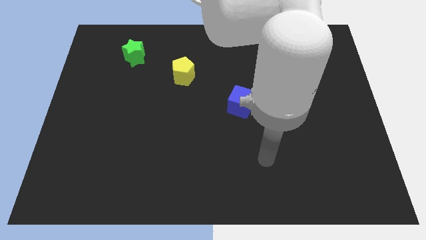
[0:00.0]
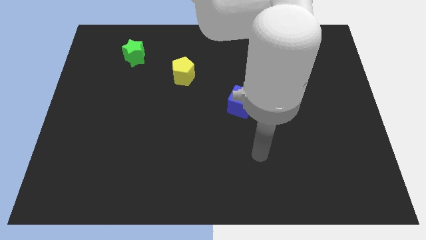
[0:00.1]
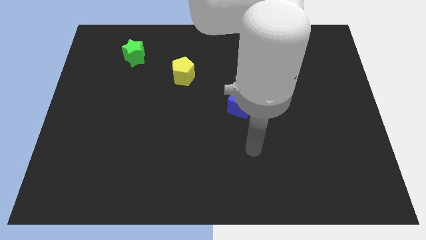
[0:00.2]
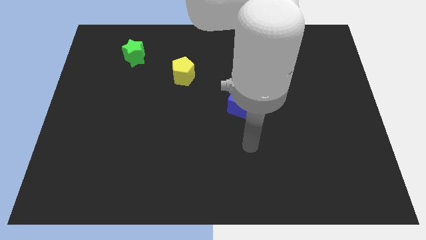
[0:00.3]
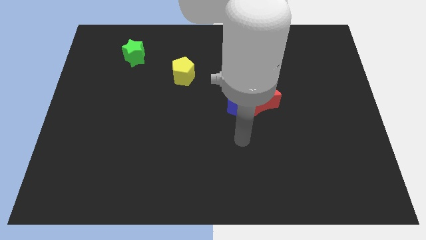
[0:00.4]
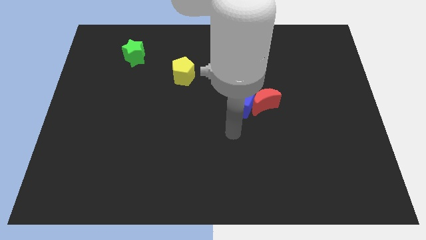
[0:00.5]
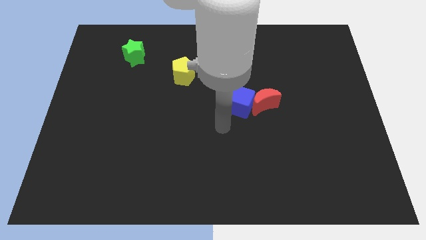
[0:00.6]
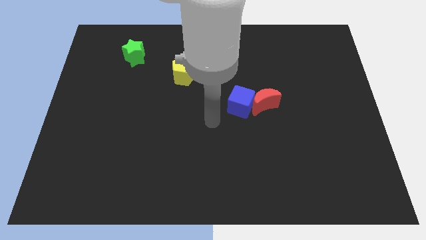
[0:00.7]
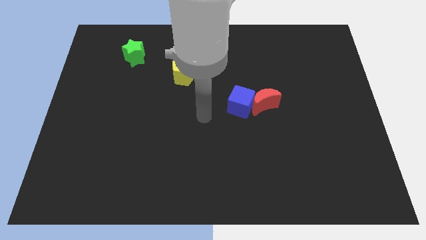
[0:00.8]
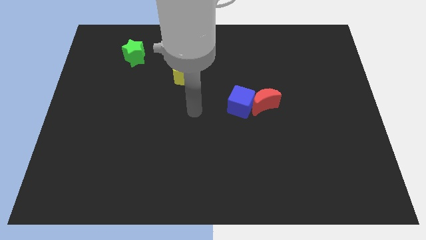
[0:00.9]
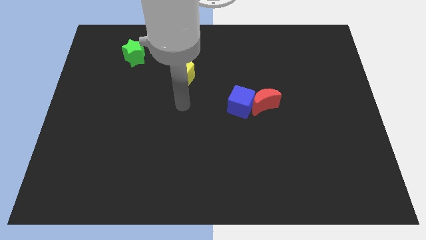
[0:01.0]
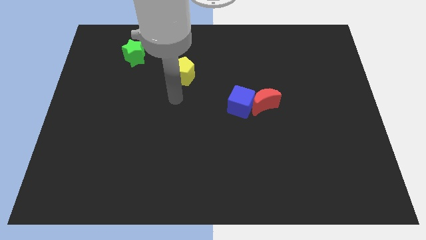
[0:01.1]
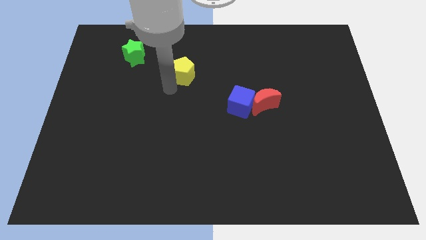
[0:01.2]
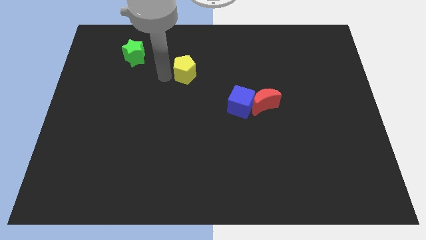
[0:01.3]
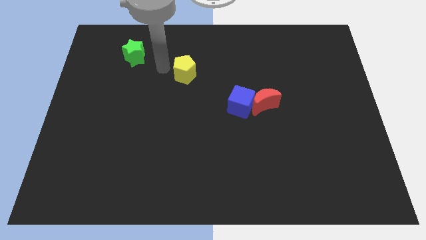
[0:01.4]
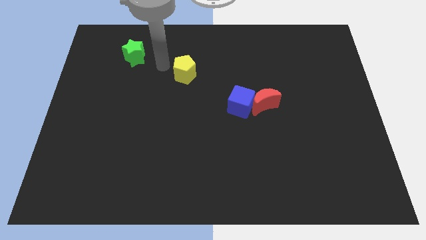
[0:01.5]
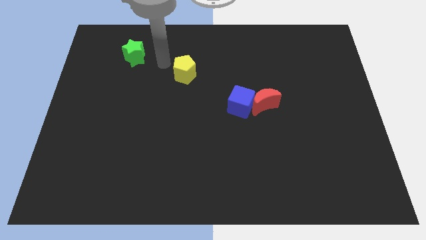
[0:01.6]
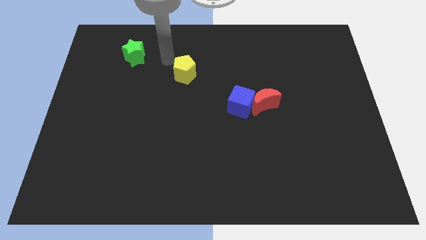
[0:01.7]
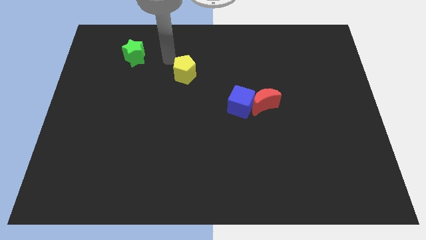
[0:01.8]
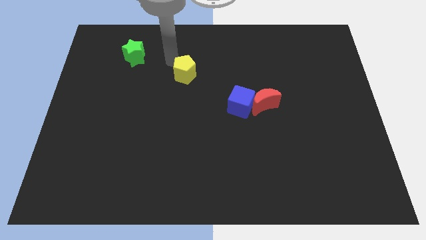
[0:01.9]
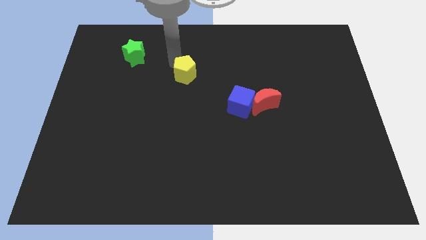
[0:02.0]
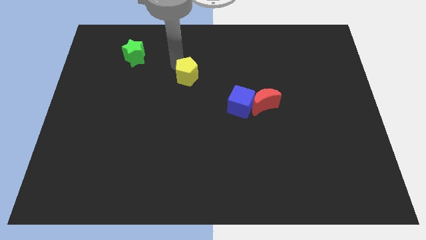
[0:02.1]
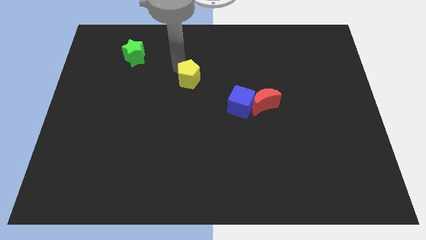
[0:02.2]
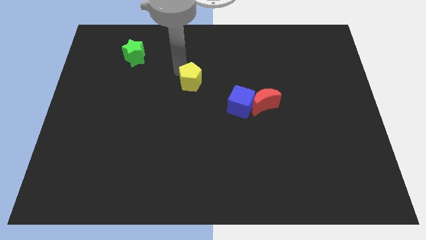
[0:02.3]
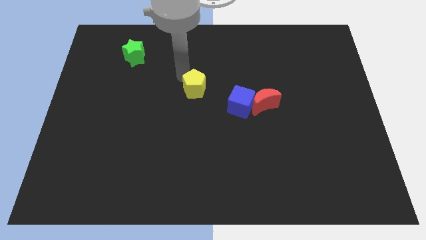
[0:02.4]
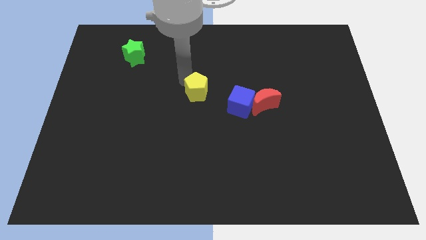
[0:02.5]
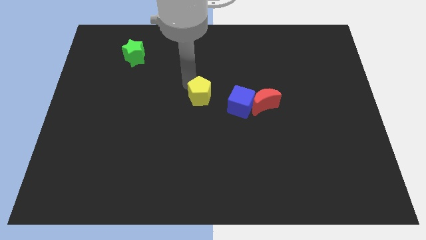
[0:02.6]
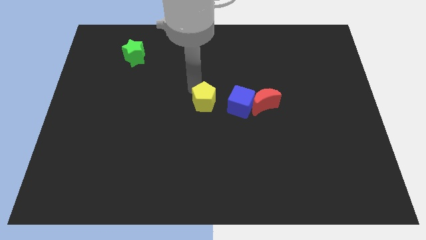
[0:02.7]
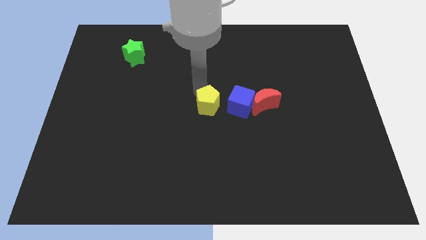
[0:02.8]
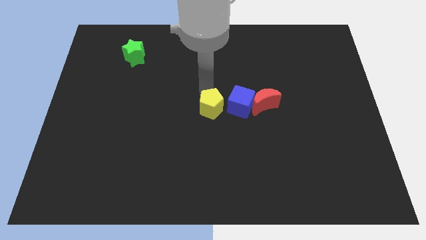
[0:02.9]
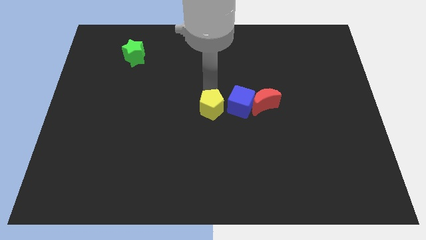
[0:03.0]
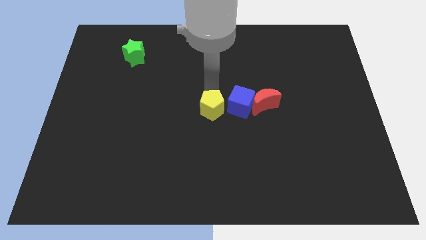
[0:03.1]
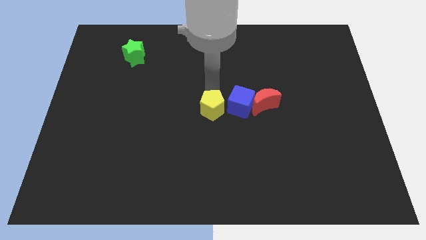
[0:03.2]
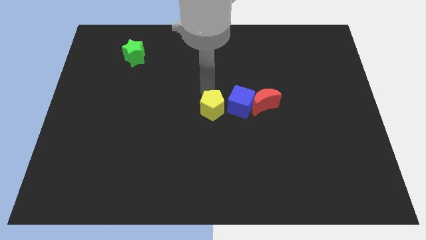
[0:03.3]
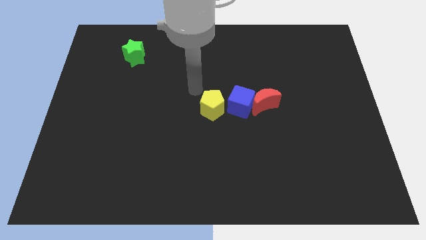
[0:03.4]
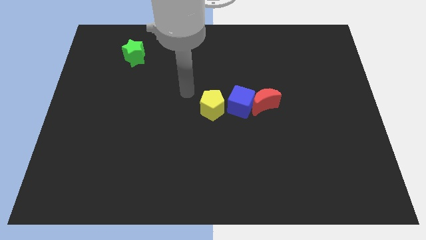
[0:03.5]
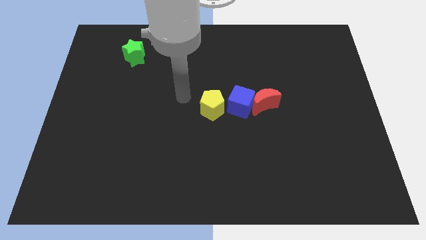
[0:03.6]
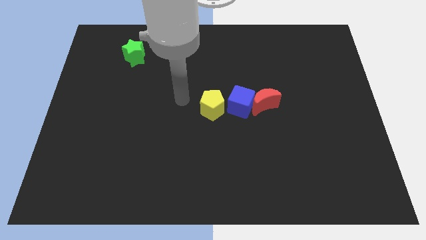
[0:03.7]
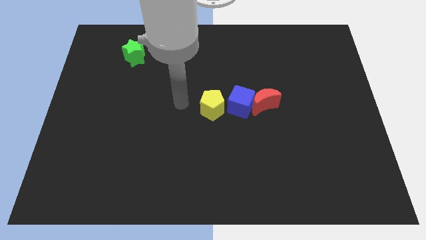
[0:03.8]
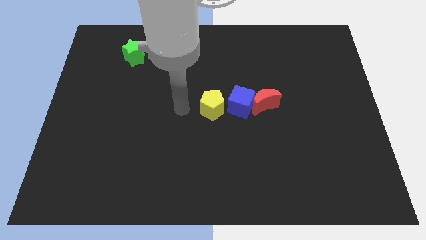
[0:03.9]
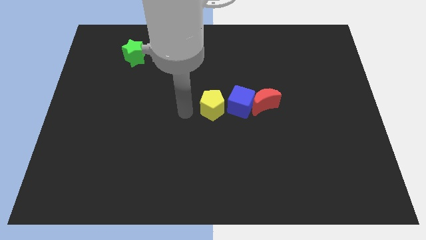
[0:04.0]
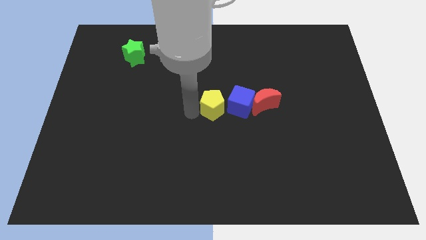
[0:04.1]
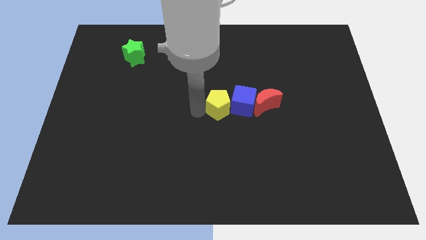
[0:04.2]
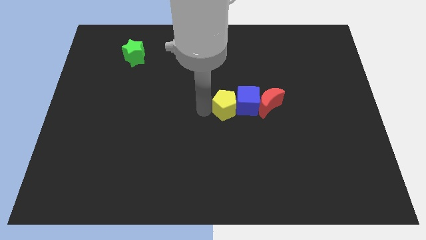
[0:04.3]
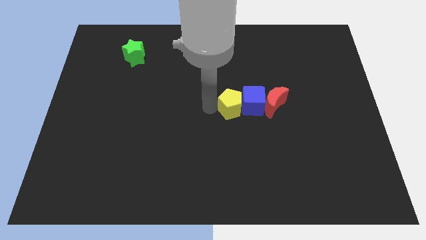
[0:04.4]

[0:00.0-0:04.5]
push the yellow pentagon next to the blue block

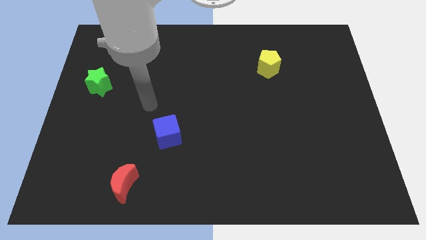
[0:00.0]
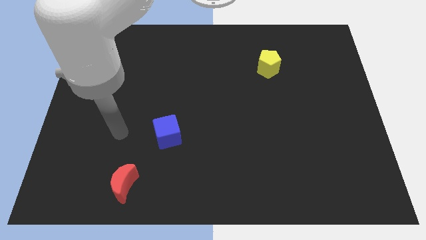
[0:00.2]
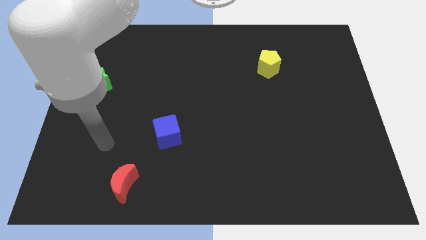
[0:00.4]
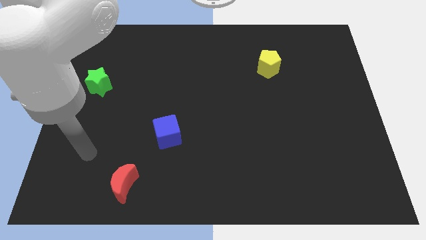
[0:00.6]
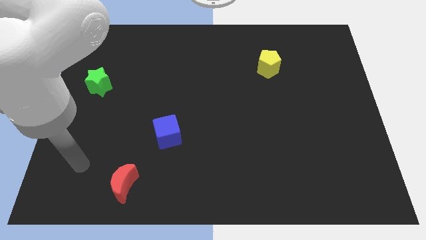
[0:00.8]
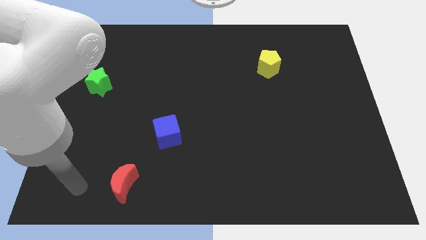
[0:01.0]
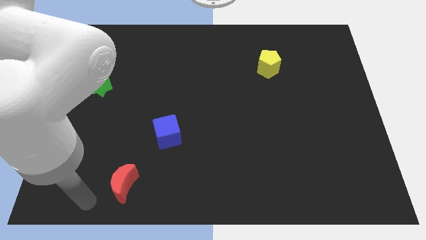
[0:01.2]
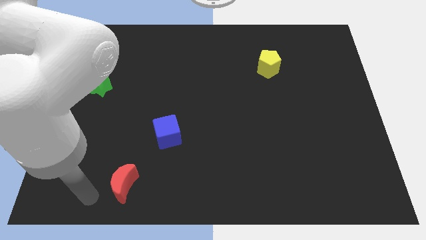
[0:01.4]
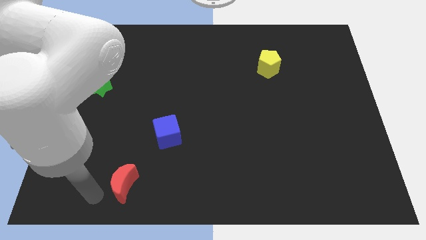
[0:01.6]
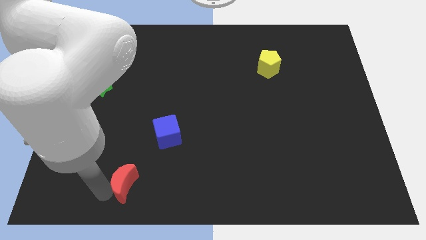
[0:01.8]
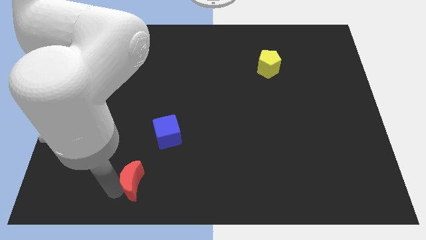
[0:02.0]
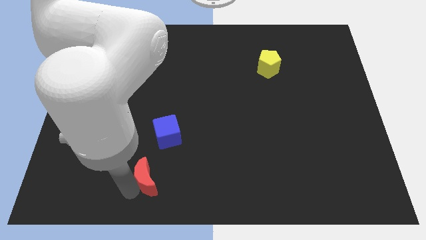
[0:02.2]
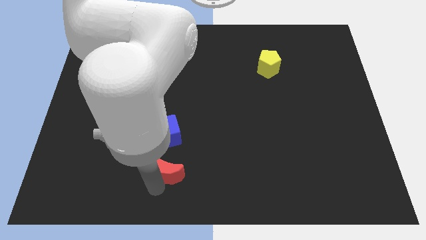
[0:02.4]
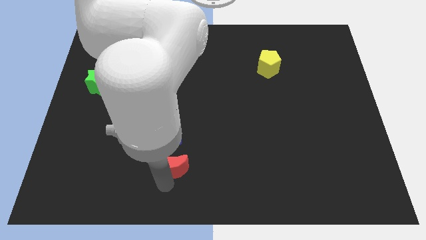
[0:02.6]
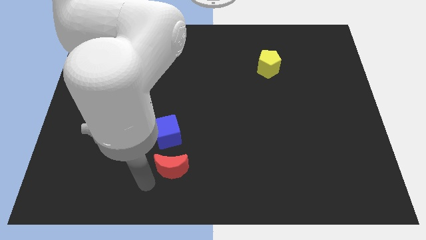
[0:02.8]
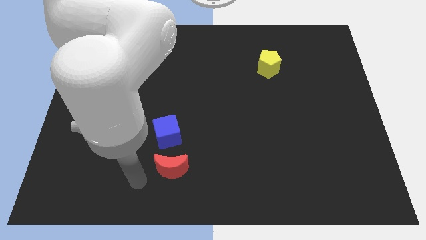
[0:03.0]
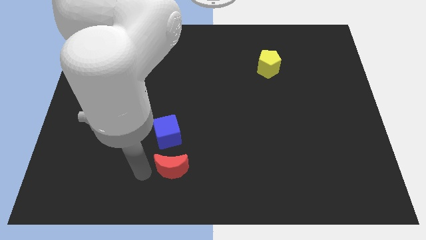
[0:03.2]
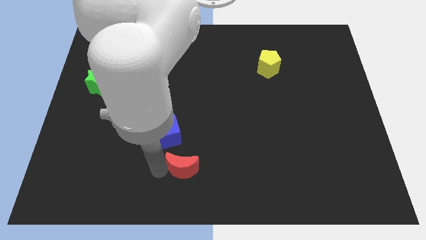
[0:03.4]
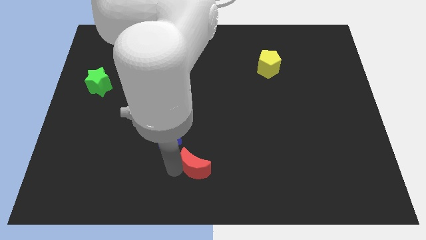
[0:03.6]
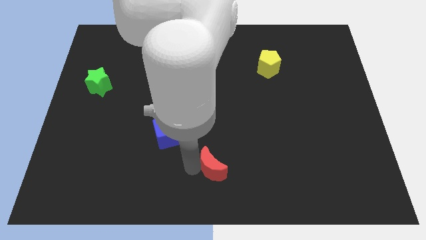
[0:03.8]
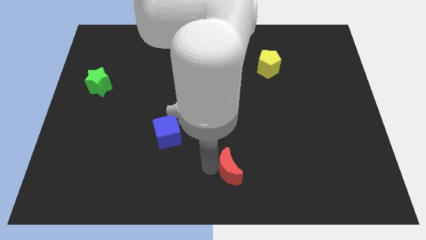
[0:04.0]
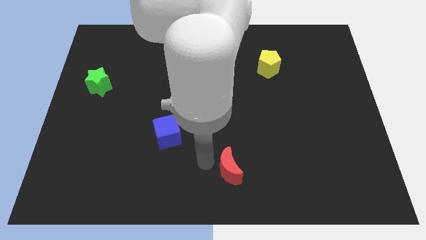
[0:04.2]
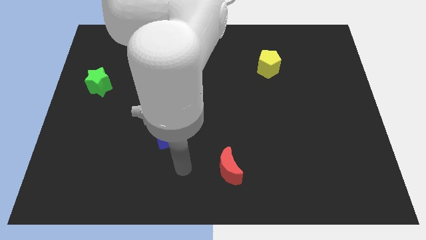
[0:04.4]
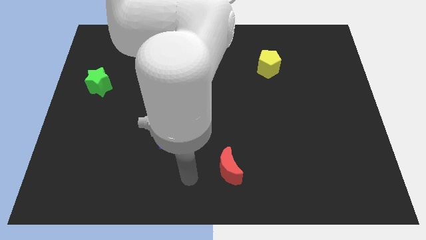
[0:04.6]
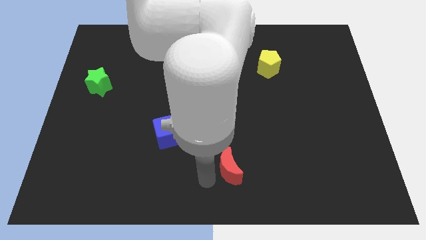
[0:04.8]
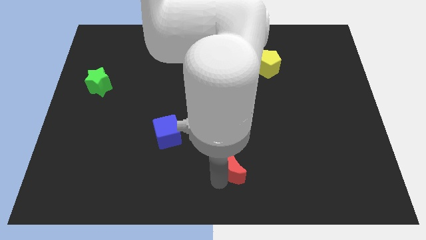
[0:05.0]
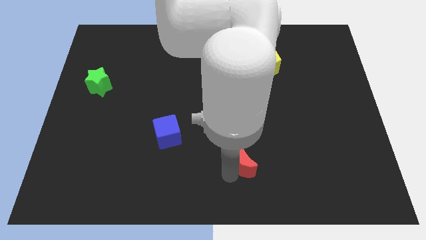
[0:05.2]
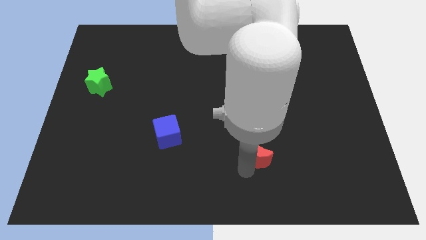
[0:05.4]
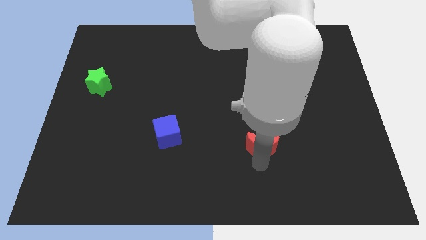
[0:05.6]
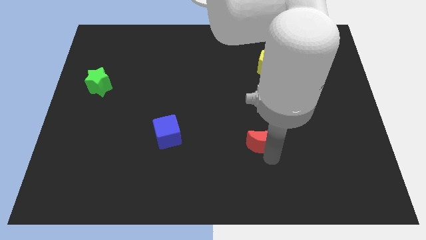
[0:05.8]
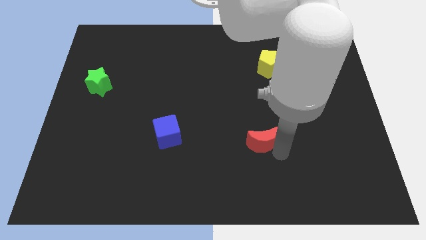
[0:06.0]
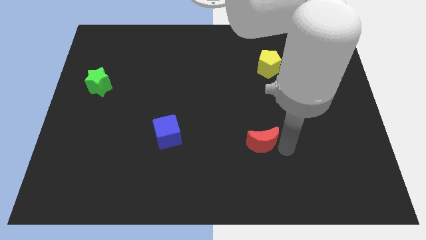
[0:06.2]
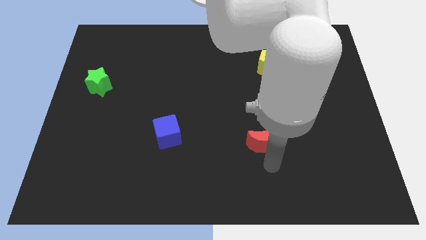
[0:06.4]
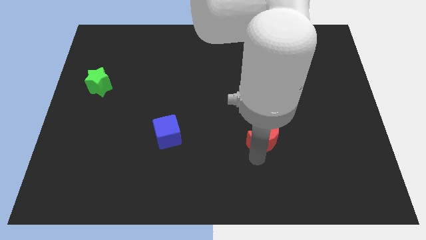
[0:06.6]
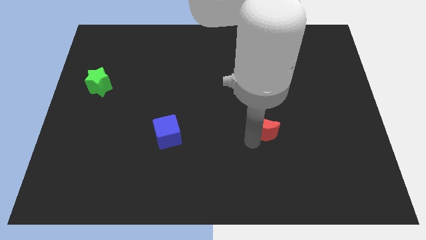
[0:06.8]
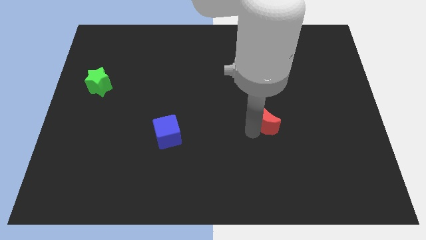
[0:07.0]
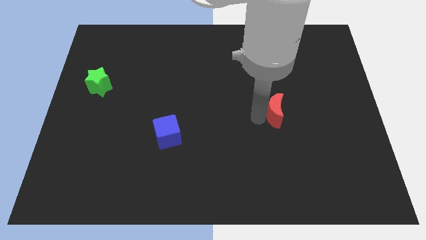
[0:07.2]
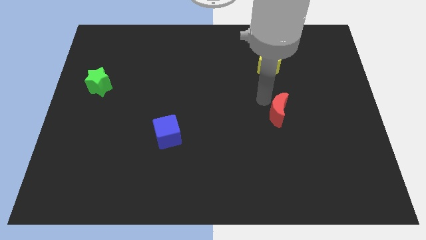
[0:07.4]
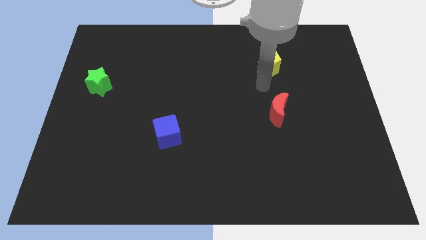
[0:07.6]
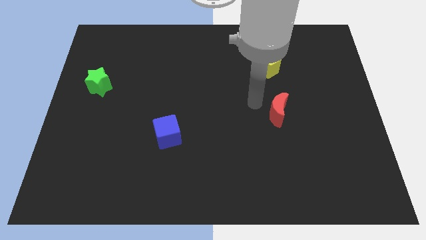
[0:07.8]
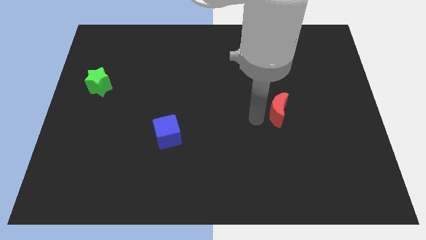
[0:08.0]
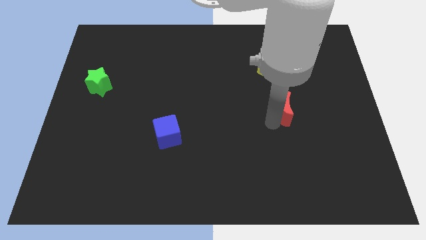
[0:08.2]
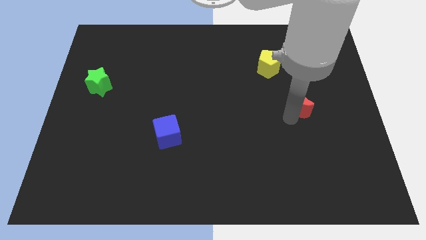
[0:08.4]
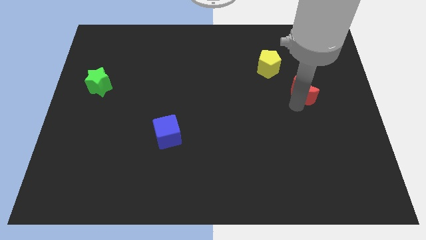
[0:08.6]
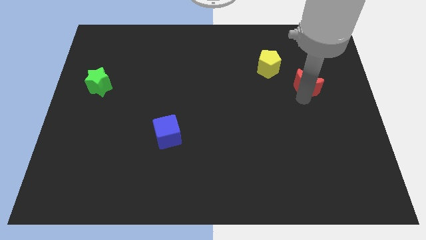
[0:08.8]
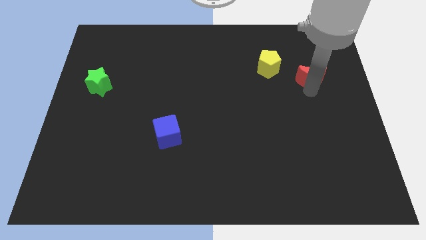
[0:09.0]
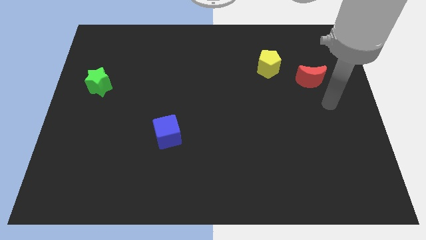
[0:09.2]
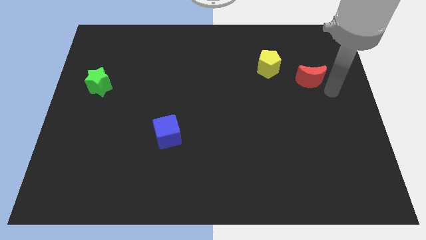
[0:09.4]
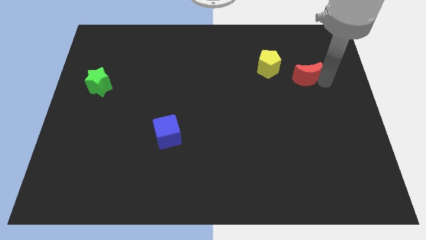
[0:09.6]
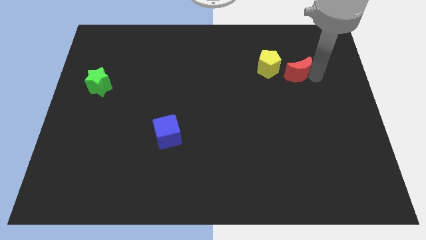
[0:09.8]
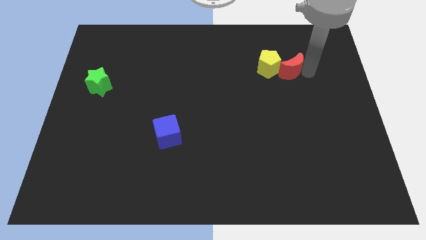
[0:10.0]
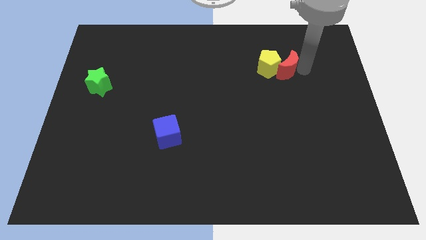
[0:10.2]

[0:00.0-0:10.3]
push the moon to the pentagon
